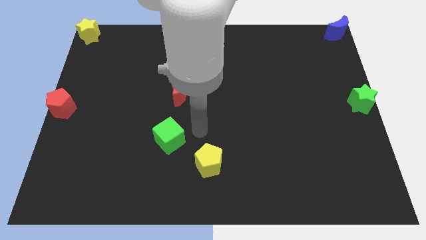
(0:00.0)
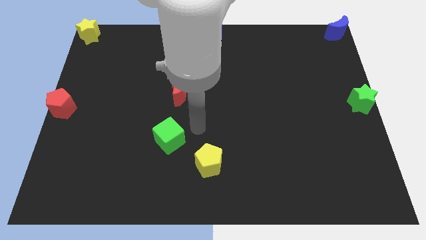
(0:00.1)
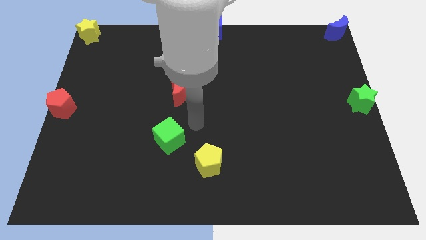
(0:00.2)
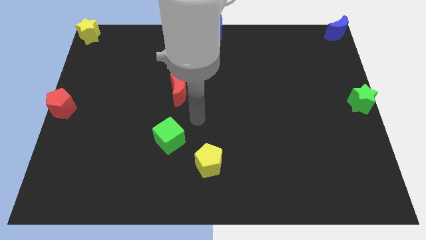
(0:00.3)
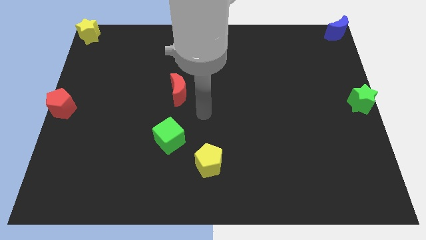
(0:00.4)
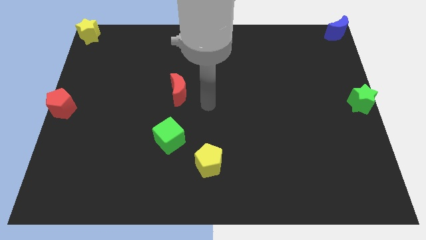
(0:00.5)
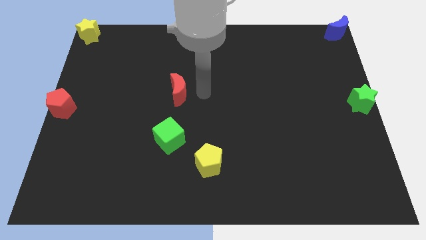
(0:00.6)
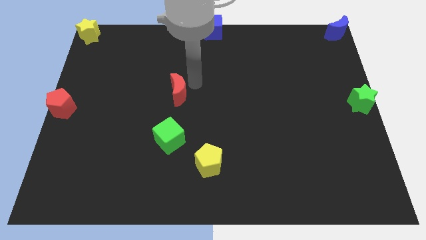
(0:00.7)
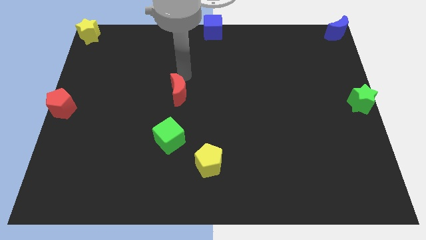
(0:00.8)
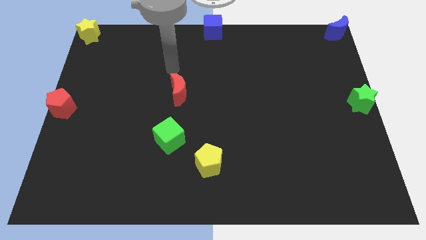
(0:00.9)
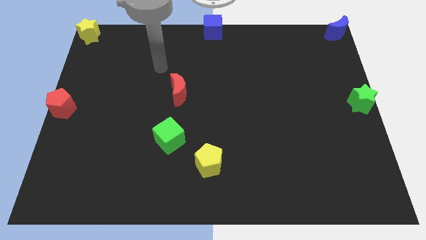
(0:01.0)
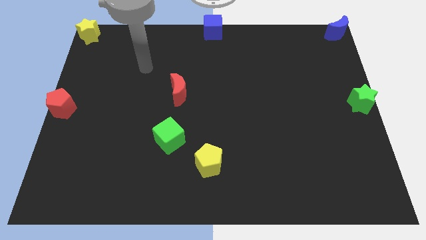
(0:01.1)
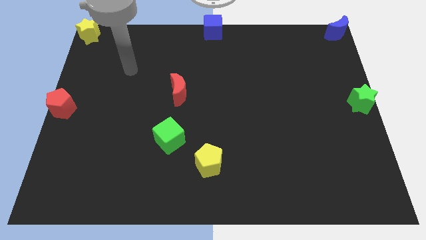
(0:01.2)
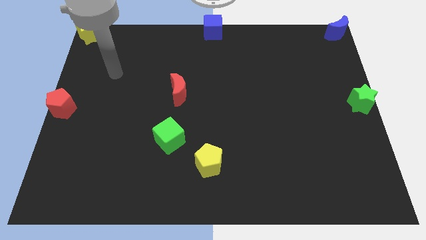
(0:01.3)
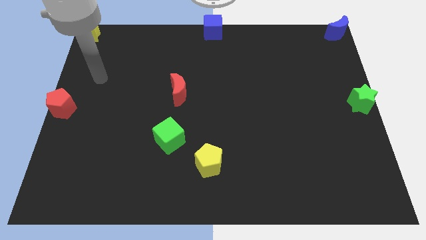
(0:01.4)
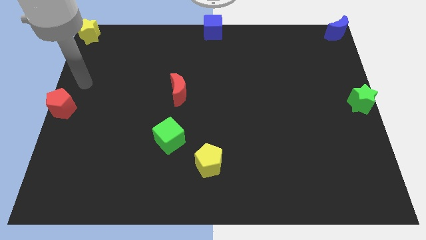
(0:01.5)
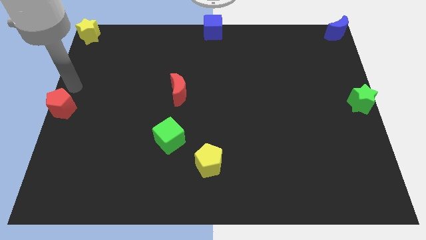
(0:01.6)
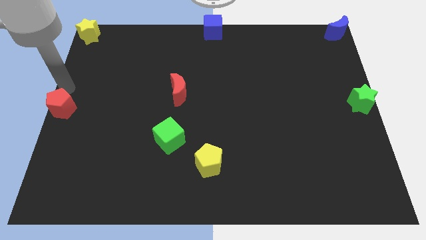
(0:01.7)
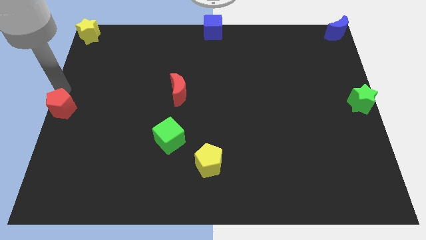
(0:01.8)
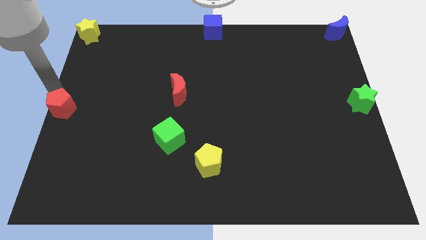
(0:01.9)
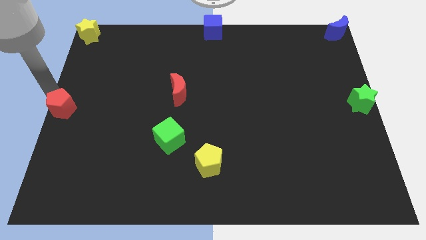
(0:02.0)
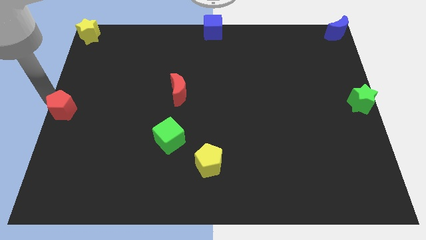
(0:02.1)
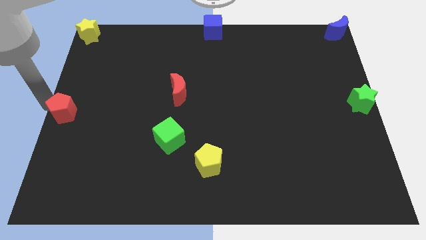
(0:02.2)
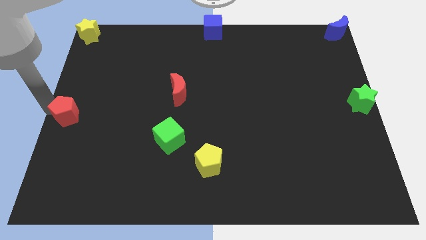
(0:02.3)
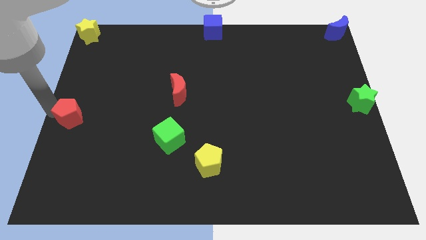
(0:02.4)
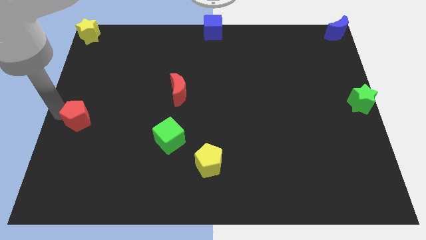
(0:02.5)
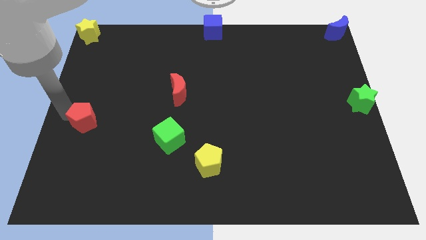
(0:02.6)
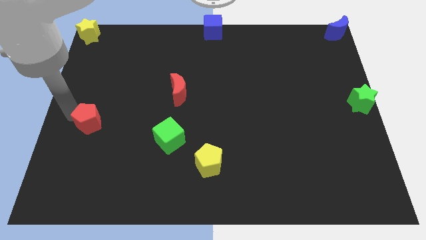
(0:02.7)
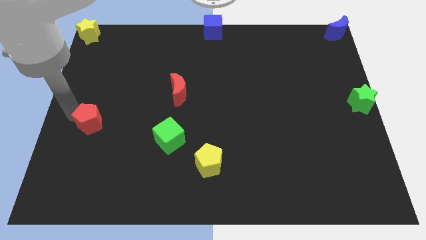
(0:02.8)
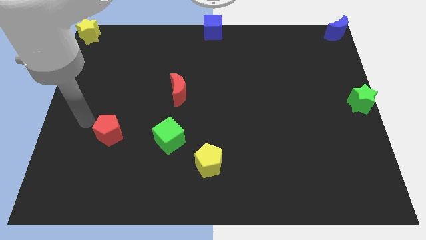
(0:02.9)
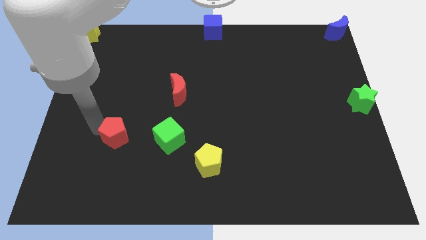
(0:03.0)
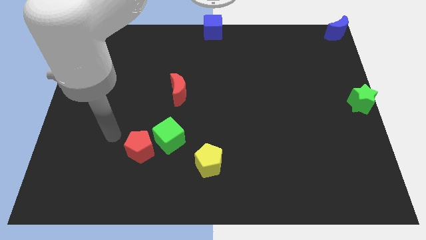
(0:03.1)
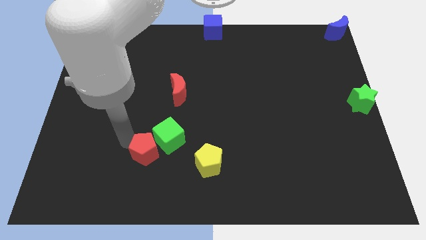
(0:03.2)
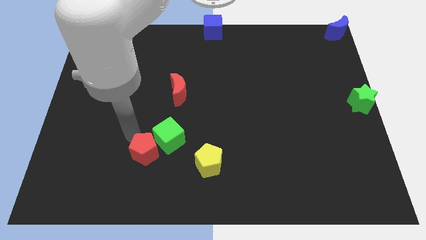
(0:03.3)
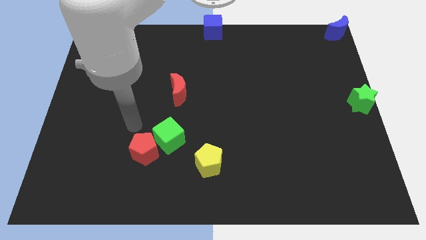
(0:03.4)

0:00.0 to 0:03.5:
move the red pentagon into the left side of the green cube

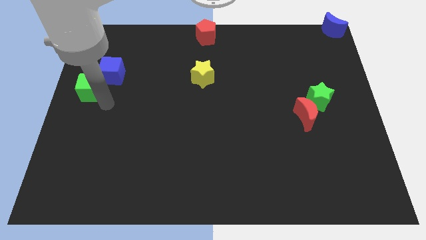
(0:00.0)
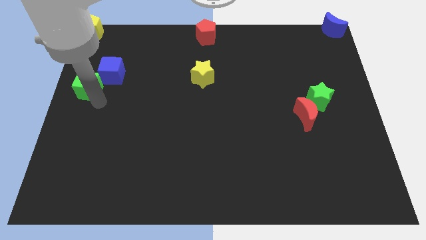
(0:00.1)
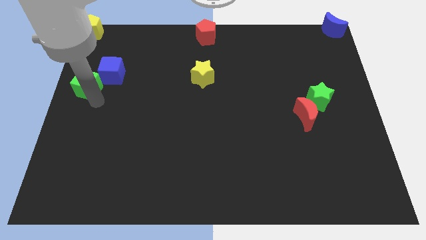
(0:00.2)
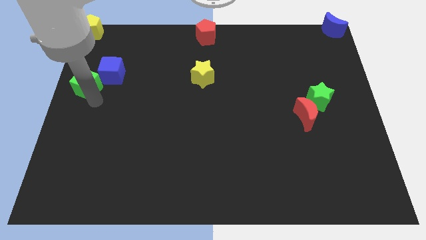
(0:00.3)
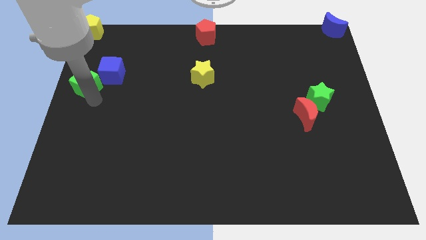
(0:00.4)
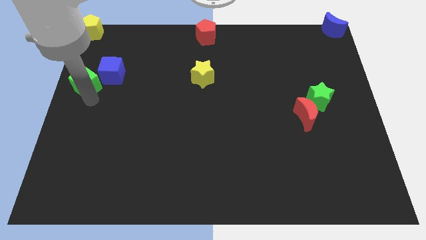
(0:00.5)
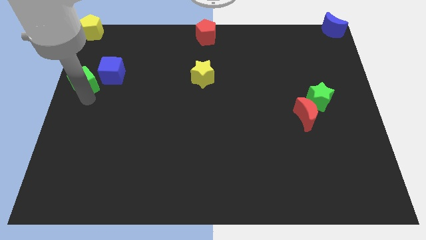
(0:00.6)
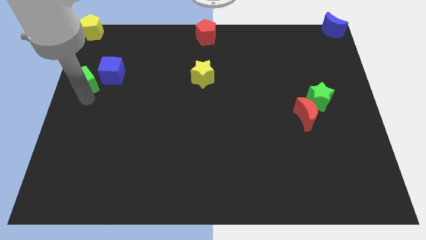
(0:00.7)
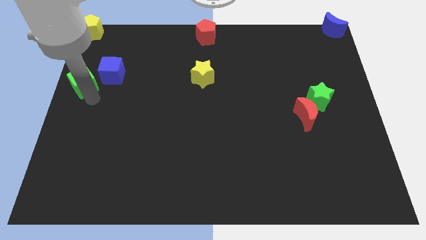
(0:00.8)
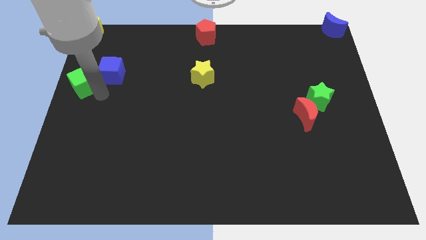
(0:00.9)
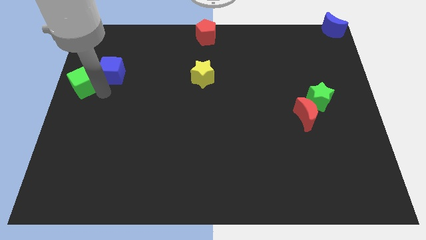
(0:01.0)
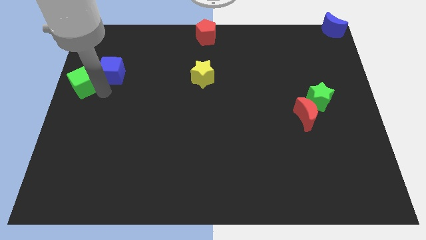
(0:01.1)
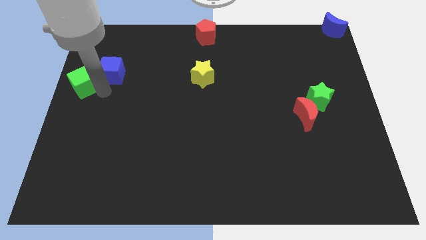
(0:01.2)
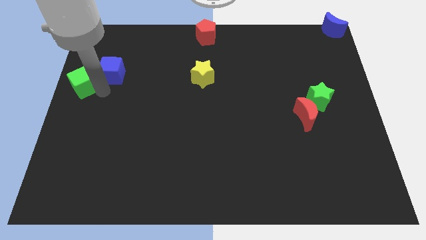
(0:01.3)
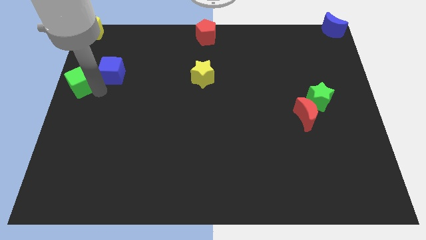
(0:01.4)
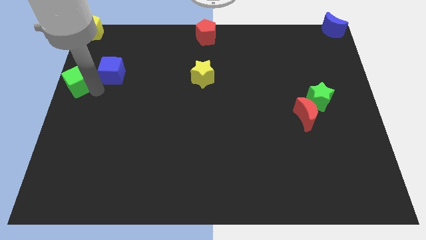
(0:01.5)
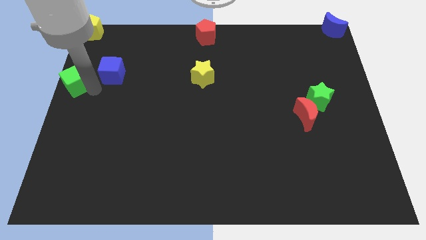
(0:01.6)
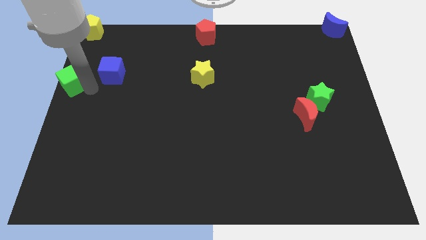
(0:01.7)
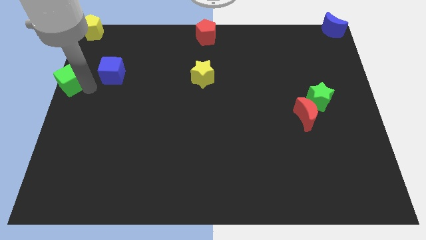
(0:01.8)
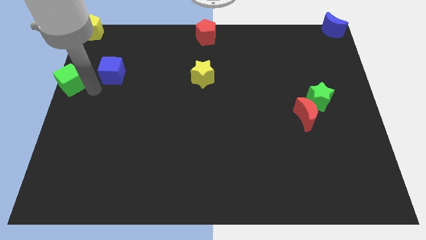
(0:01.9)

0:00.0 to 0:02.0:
slide the green cube away from the blue cube

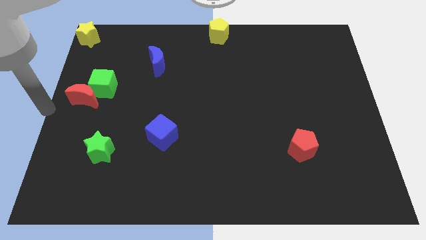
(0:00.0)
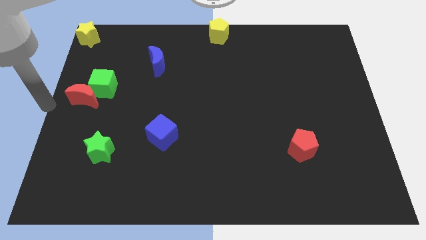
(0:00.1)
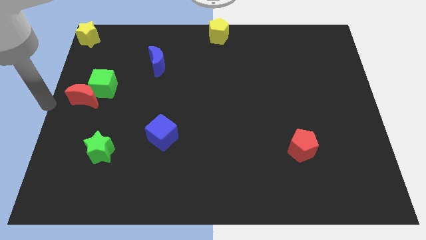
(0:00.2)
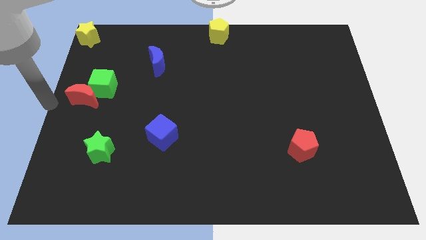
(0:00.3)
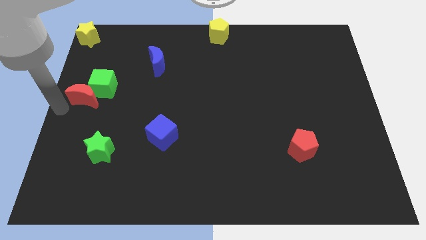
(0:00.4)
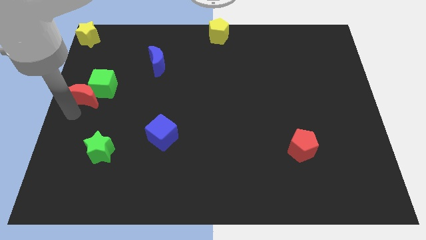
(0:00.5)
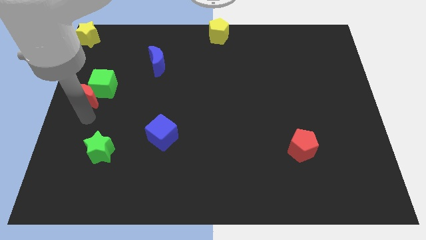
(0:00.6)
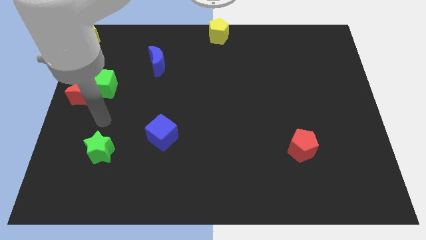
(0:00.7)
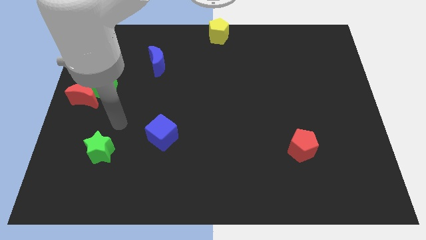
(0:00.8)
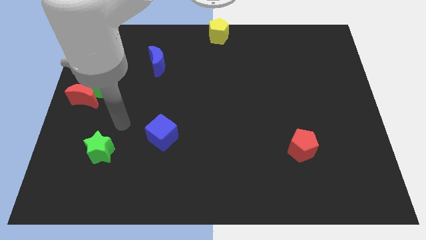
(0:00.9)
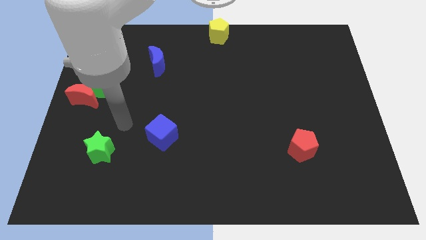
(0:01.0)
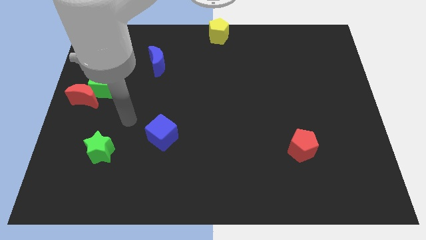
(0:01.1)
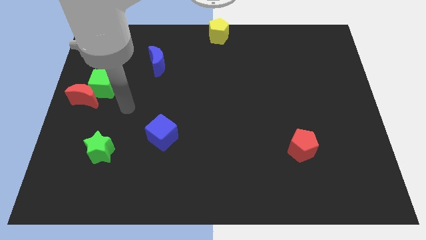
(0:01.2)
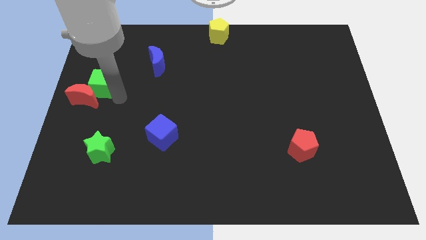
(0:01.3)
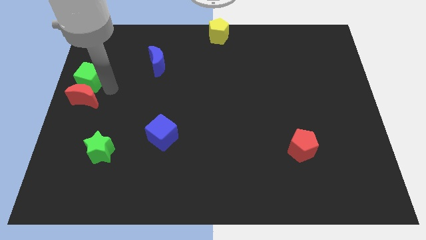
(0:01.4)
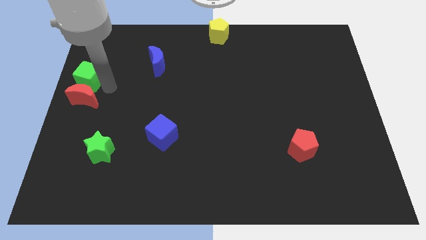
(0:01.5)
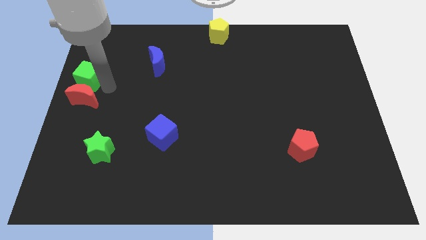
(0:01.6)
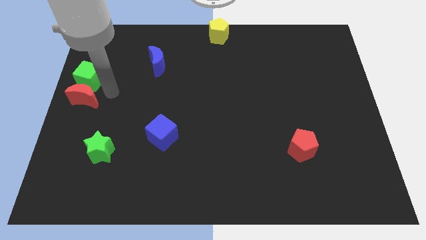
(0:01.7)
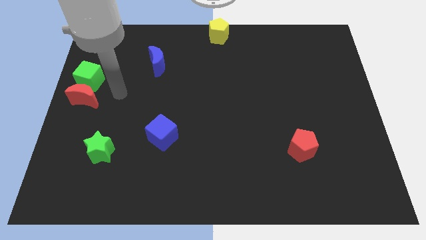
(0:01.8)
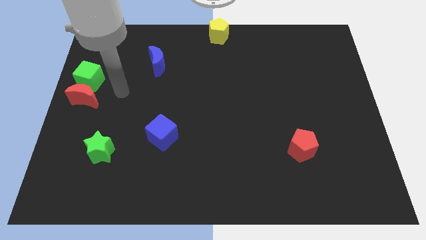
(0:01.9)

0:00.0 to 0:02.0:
place the green cube above the red moon

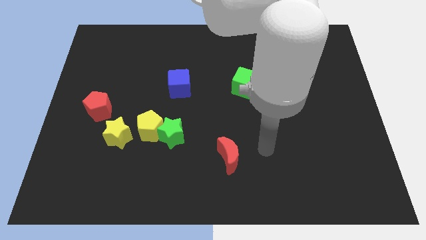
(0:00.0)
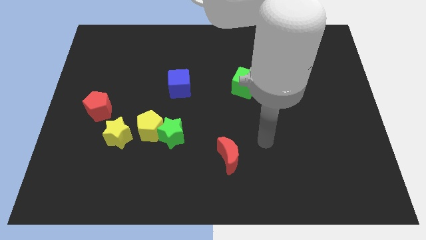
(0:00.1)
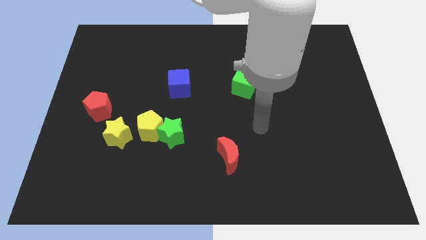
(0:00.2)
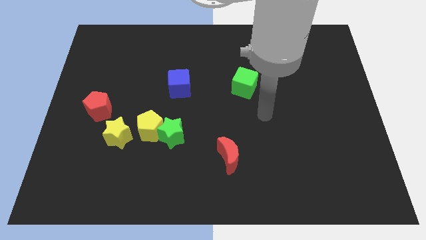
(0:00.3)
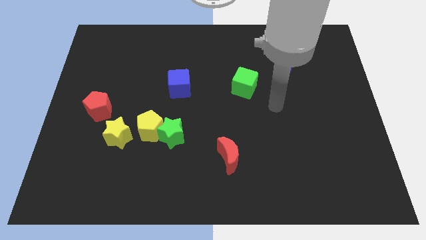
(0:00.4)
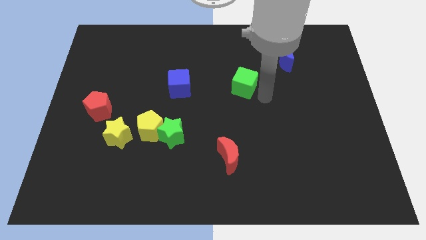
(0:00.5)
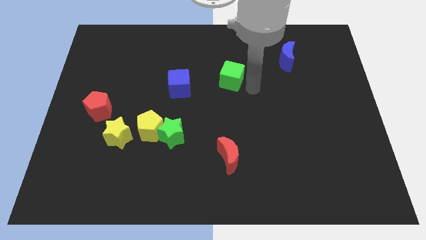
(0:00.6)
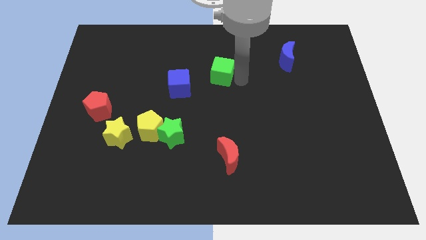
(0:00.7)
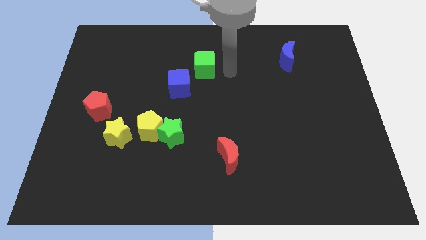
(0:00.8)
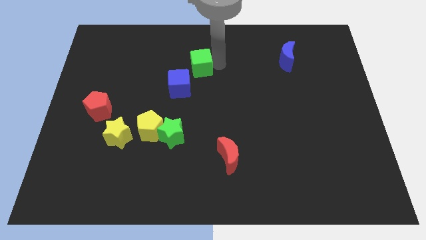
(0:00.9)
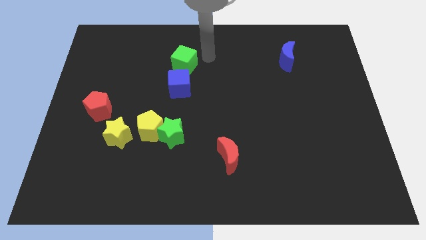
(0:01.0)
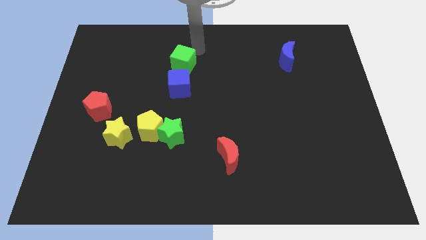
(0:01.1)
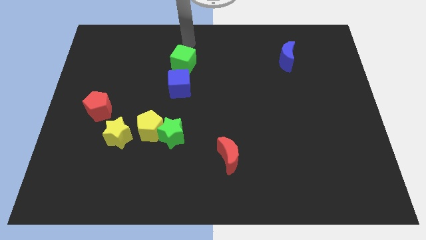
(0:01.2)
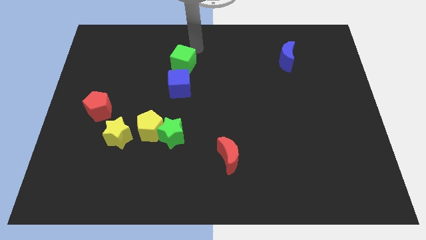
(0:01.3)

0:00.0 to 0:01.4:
put the green cube above the blue cube
